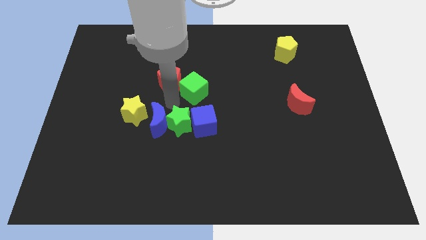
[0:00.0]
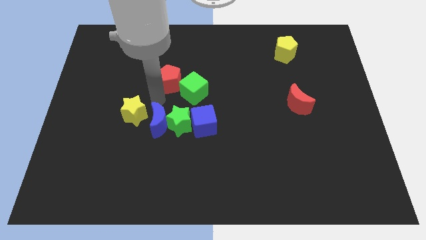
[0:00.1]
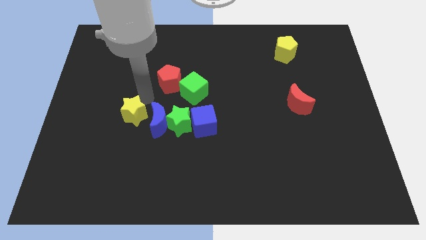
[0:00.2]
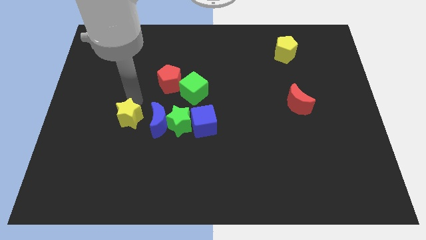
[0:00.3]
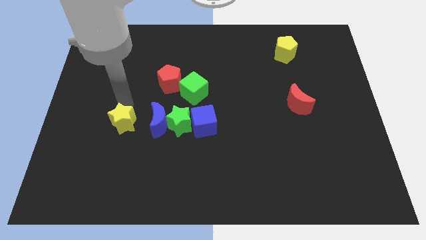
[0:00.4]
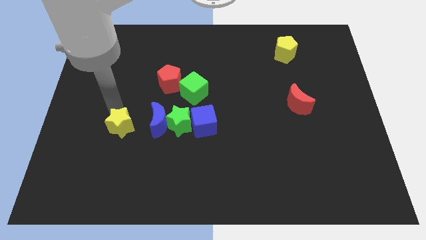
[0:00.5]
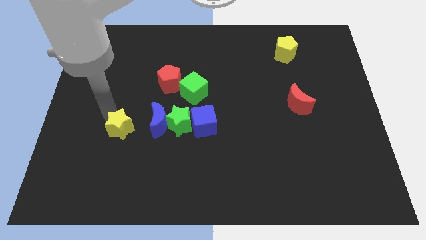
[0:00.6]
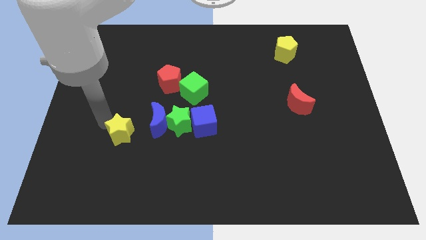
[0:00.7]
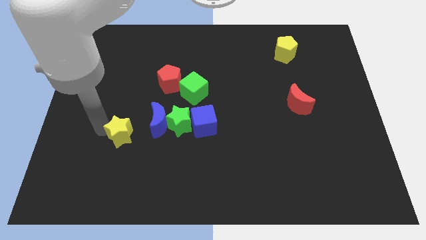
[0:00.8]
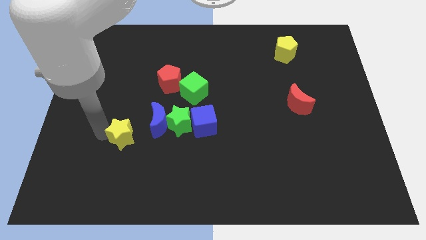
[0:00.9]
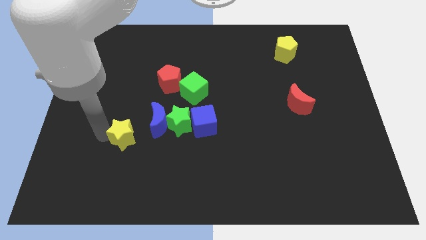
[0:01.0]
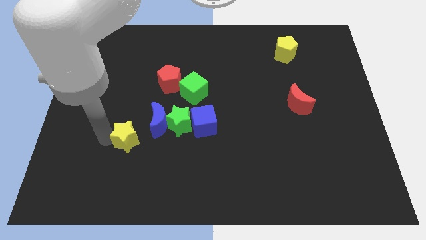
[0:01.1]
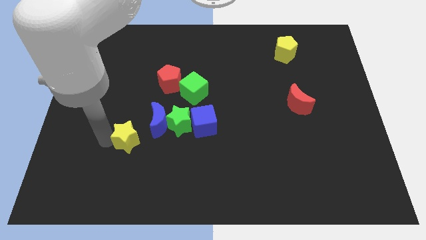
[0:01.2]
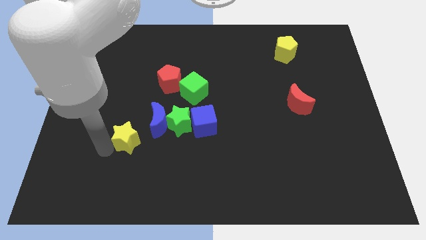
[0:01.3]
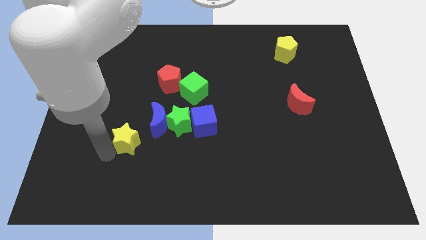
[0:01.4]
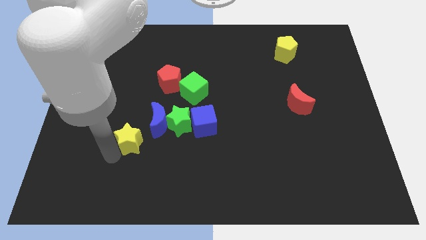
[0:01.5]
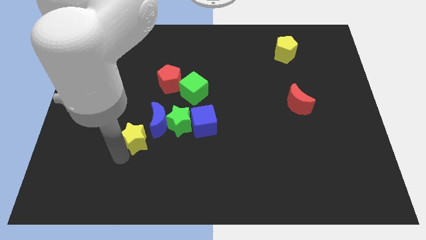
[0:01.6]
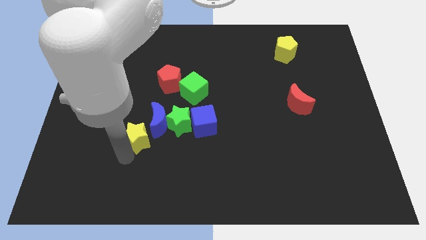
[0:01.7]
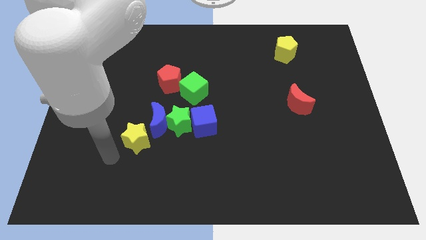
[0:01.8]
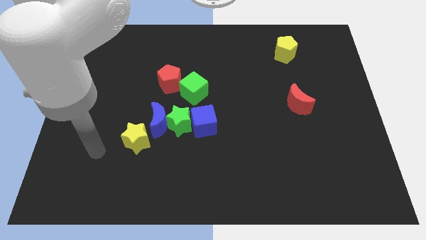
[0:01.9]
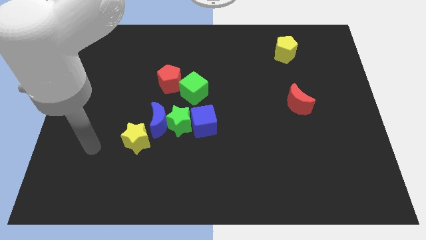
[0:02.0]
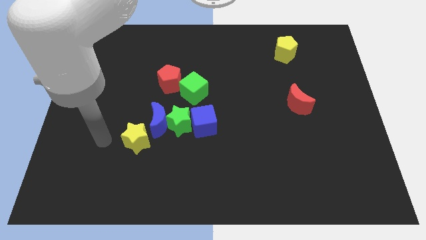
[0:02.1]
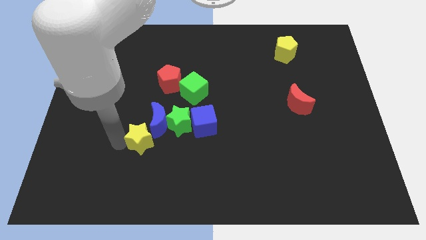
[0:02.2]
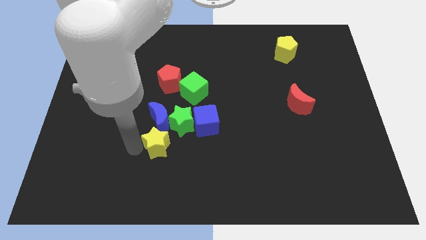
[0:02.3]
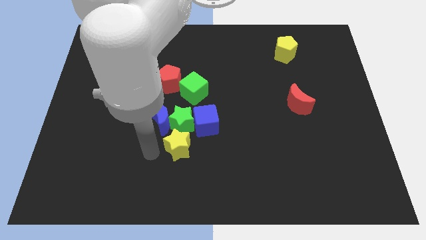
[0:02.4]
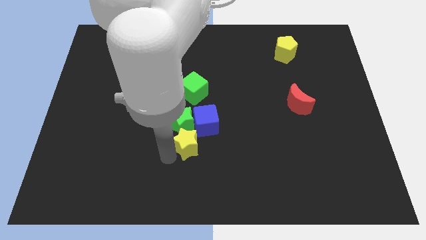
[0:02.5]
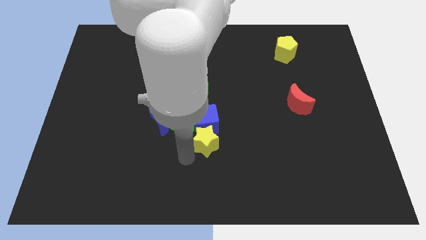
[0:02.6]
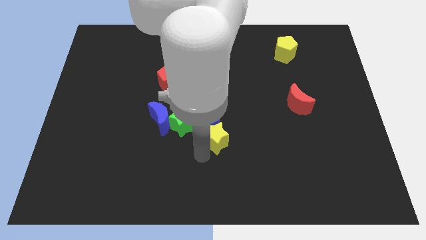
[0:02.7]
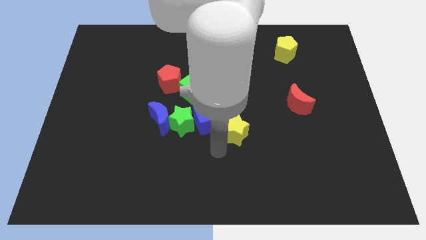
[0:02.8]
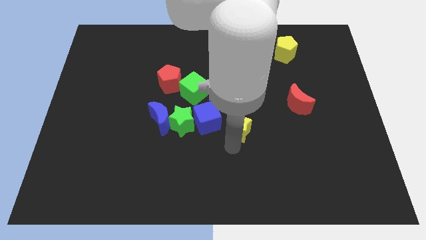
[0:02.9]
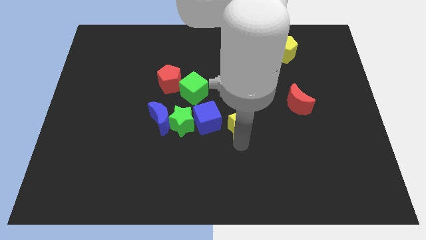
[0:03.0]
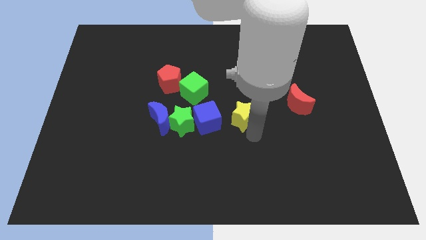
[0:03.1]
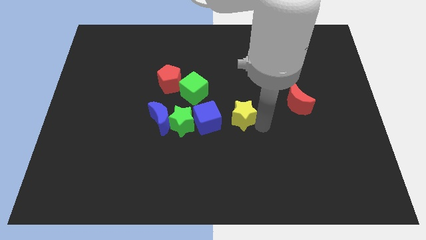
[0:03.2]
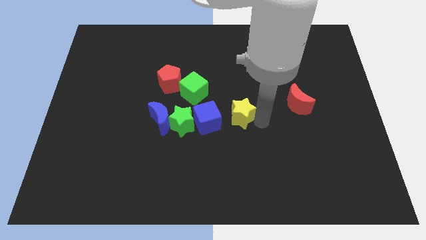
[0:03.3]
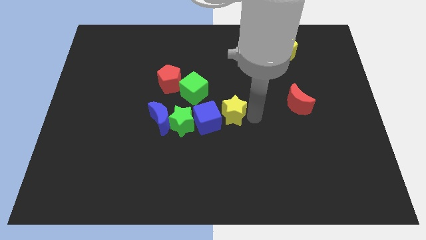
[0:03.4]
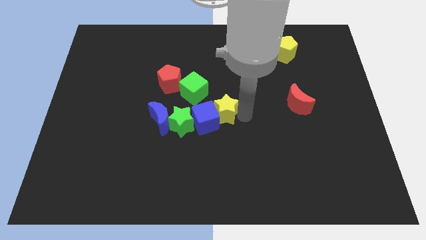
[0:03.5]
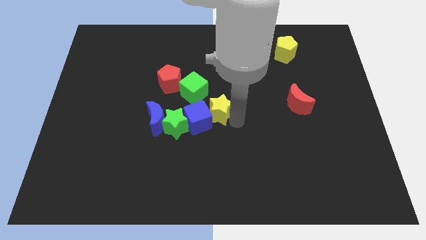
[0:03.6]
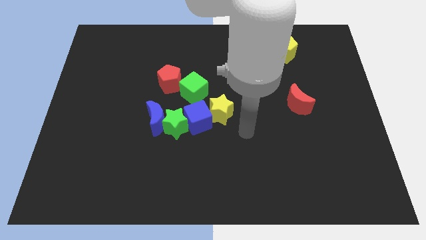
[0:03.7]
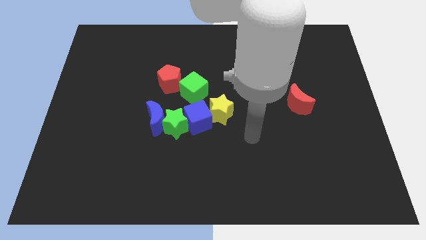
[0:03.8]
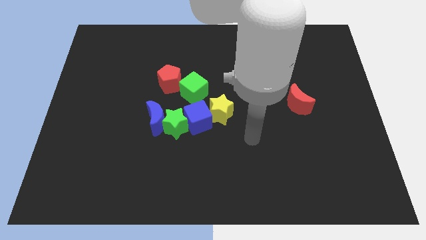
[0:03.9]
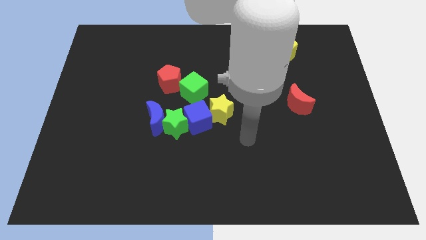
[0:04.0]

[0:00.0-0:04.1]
move yellow star at the center

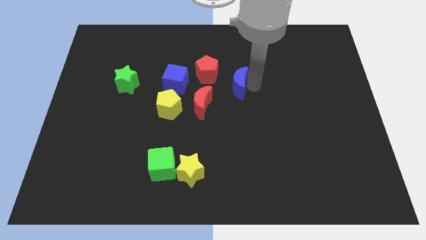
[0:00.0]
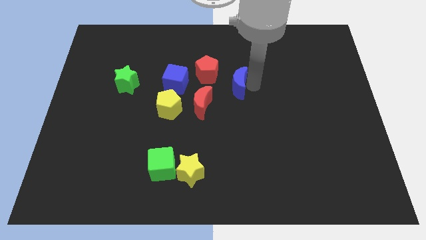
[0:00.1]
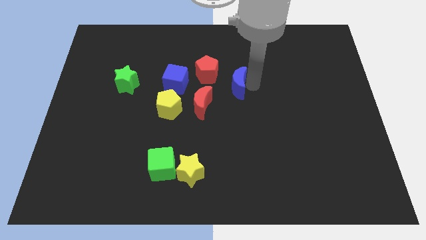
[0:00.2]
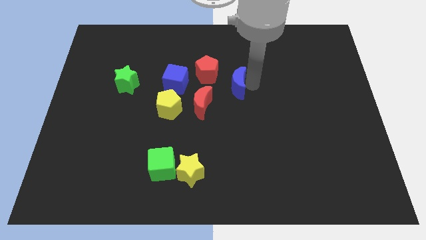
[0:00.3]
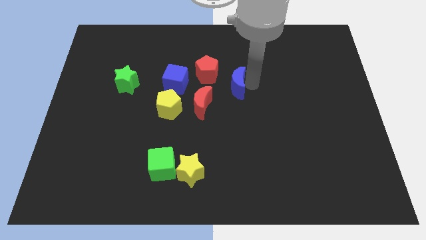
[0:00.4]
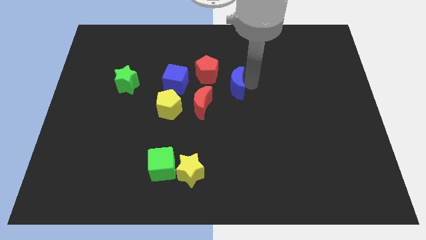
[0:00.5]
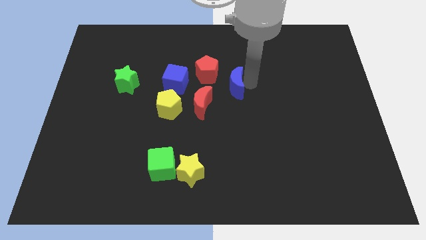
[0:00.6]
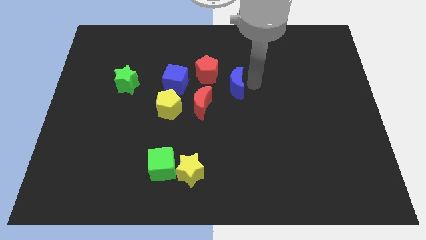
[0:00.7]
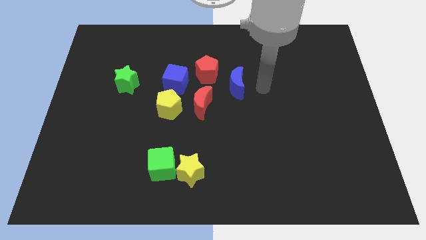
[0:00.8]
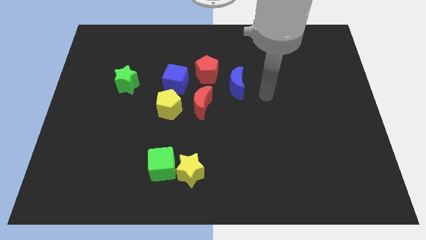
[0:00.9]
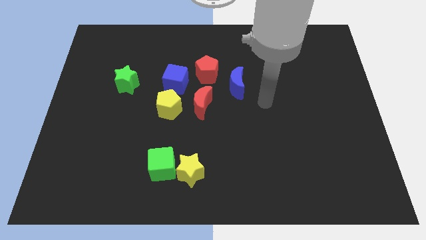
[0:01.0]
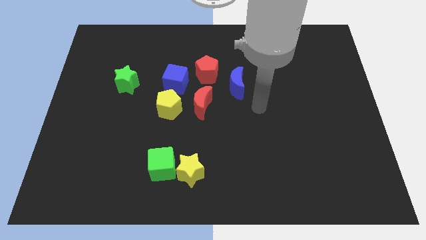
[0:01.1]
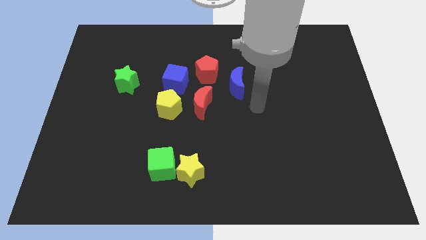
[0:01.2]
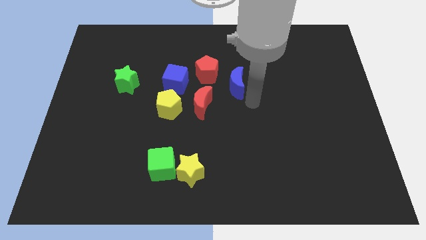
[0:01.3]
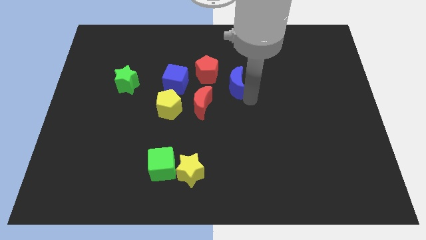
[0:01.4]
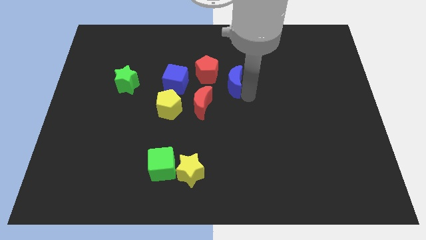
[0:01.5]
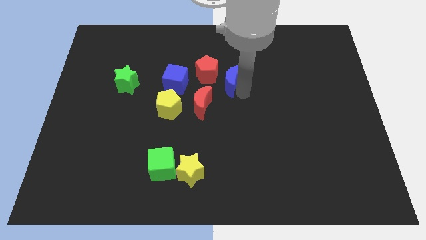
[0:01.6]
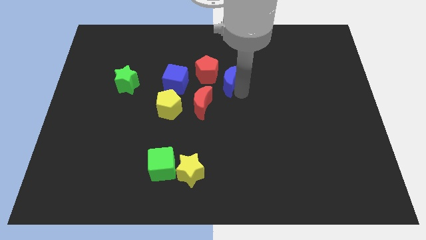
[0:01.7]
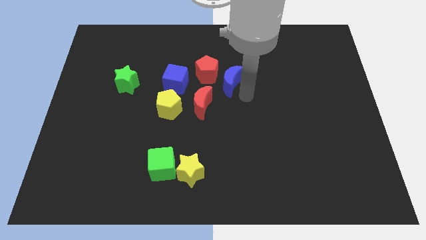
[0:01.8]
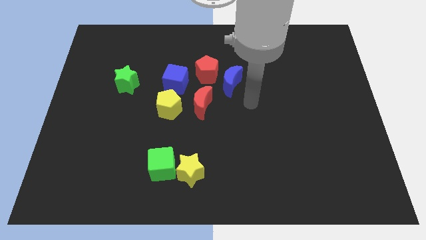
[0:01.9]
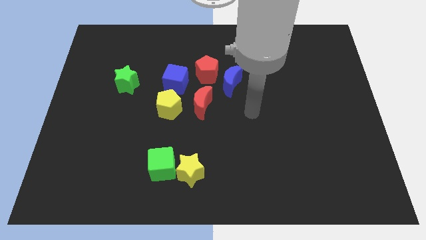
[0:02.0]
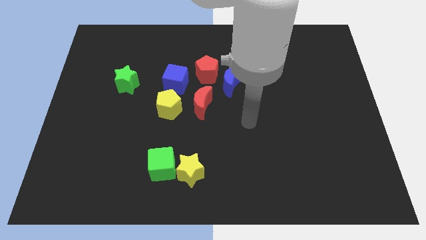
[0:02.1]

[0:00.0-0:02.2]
place the blue moon close the red blocks

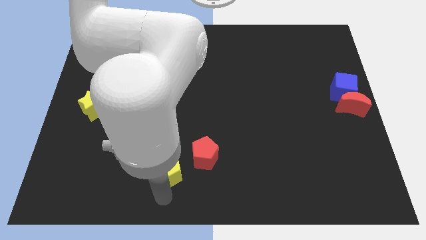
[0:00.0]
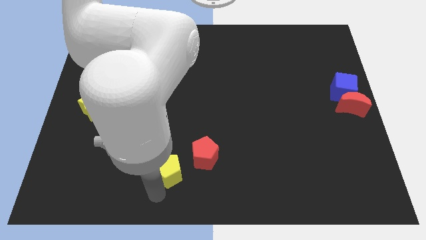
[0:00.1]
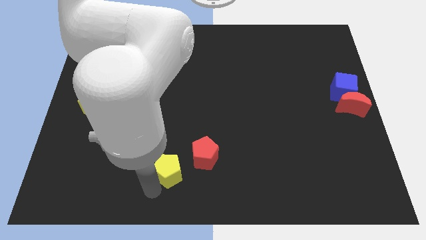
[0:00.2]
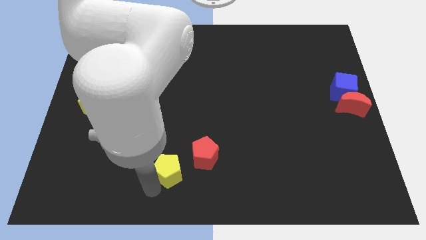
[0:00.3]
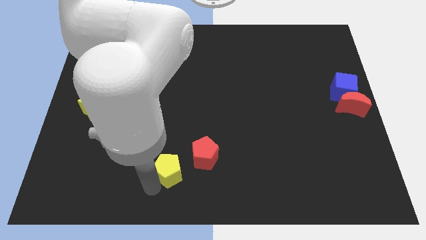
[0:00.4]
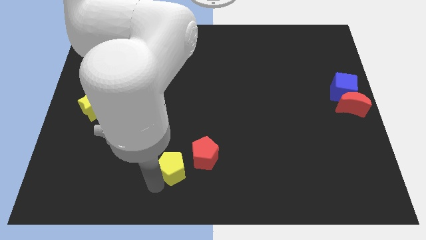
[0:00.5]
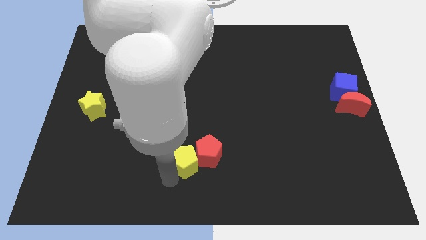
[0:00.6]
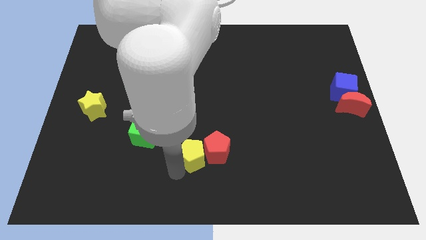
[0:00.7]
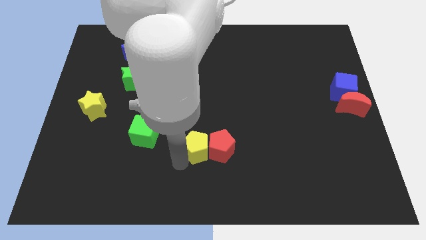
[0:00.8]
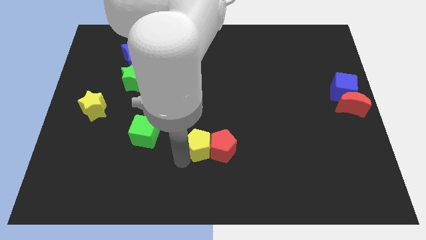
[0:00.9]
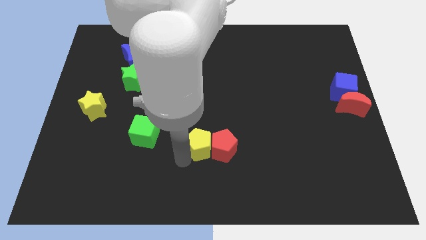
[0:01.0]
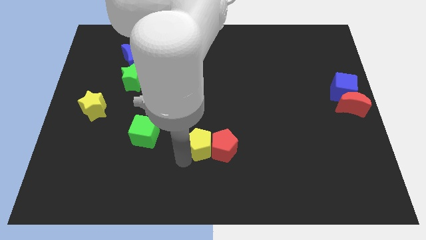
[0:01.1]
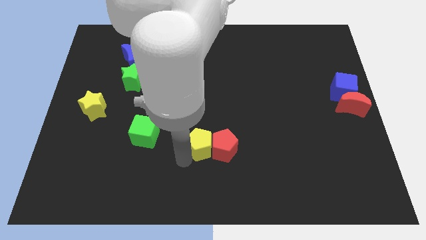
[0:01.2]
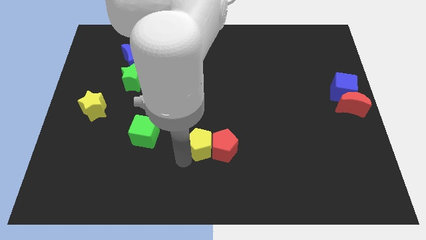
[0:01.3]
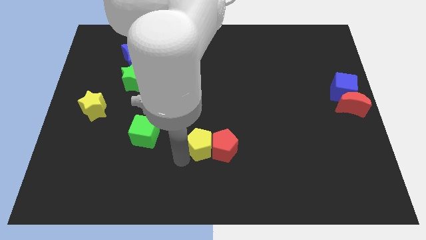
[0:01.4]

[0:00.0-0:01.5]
push yellow pentagon in to red pentagon

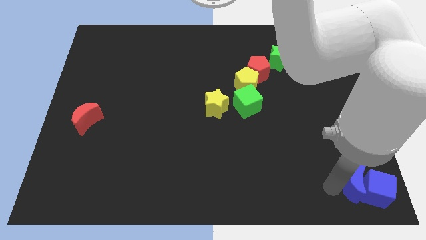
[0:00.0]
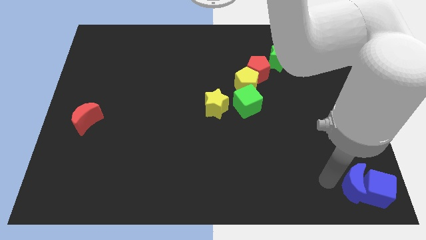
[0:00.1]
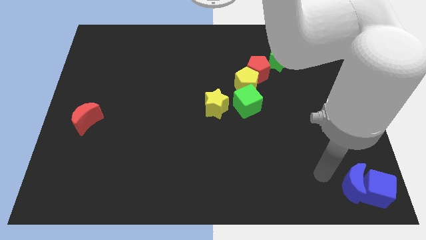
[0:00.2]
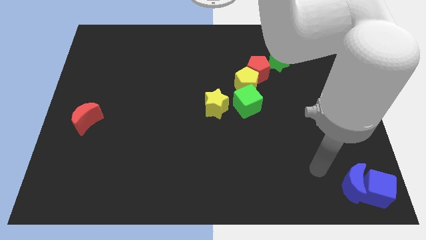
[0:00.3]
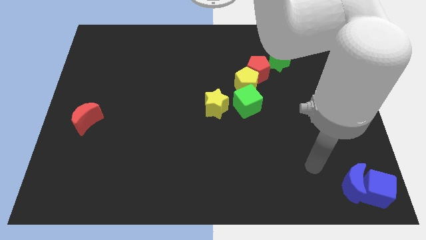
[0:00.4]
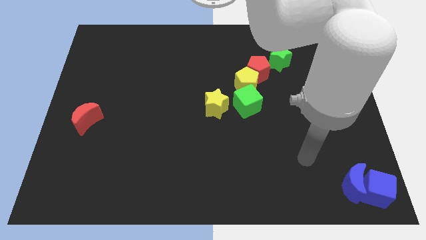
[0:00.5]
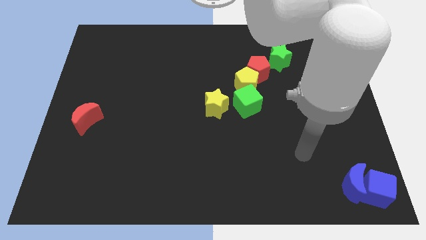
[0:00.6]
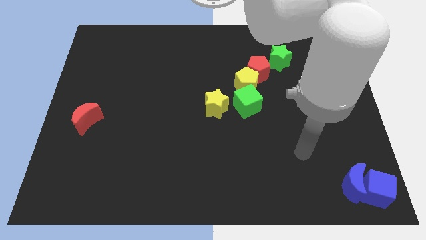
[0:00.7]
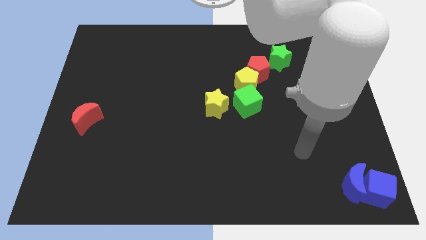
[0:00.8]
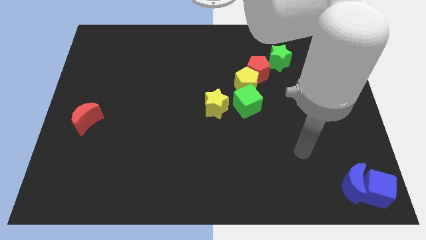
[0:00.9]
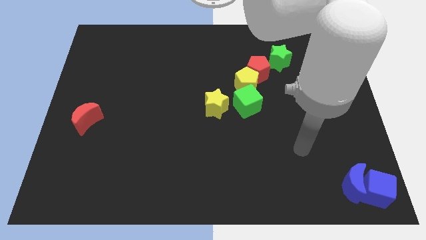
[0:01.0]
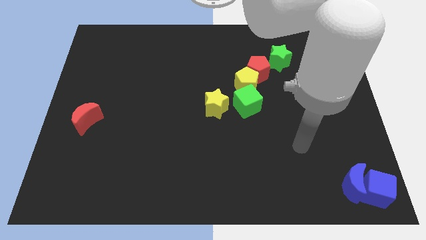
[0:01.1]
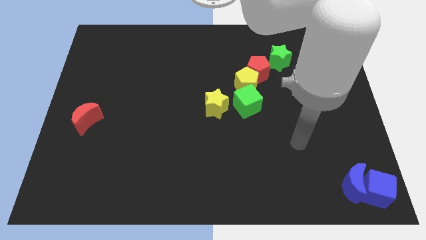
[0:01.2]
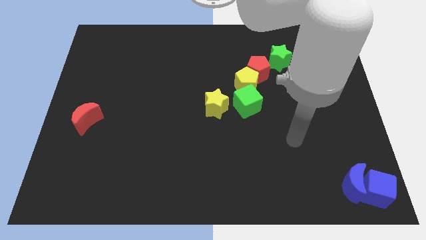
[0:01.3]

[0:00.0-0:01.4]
move your arm away from blue moon
